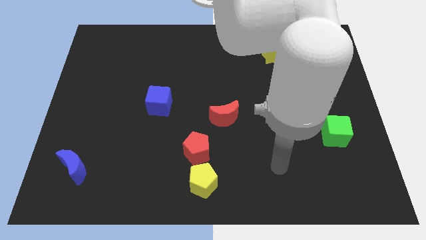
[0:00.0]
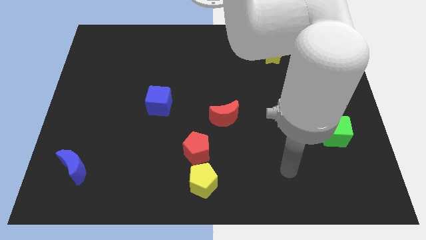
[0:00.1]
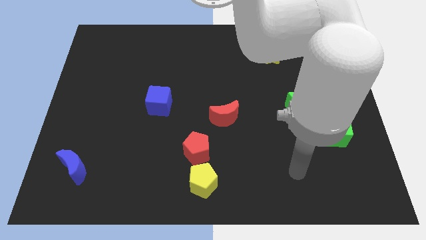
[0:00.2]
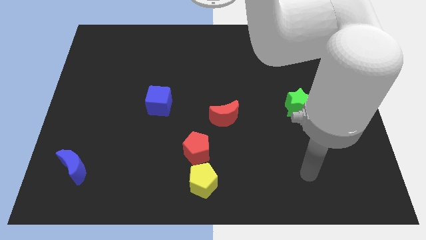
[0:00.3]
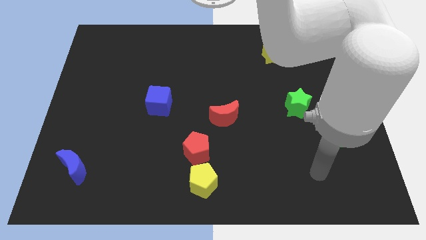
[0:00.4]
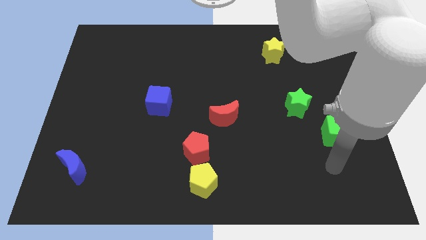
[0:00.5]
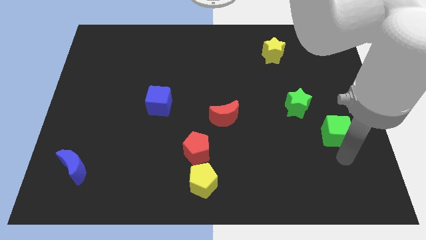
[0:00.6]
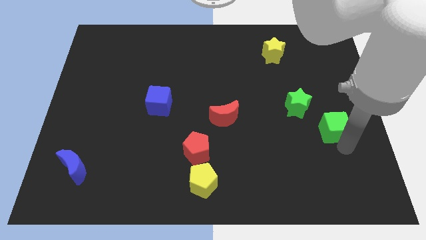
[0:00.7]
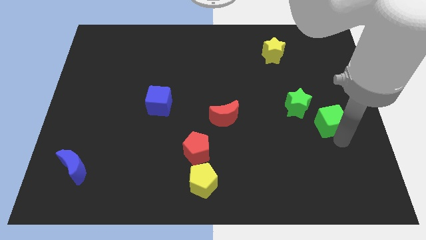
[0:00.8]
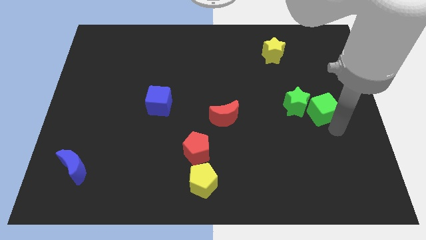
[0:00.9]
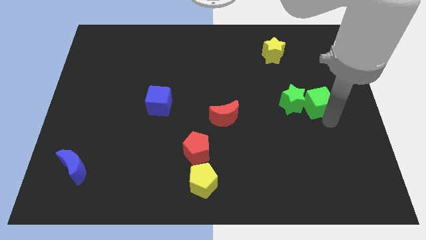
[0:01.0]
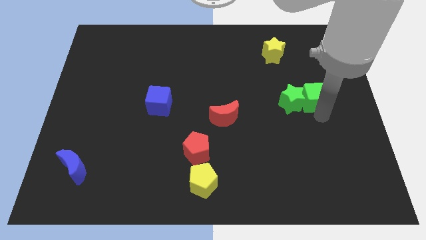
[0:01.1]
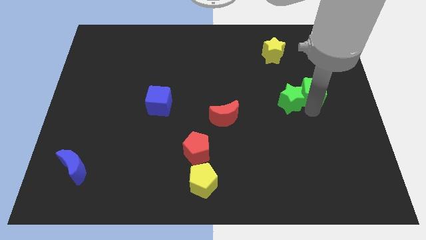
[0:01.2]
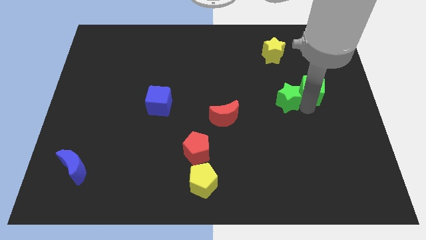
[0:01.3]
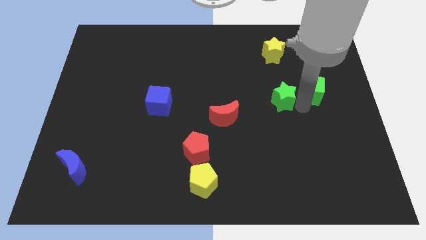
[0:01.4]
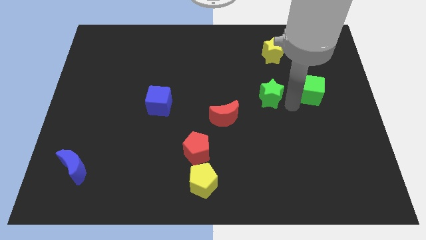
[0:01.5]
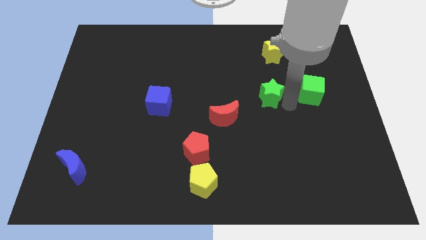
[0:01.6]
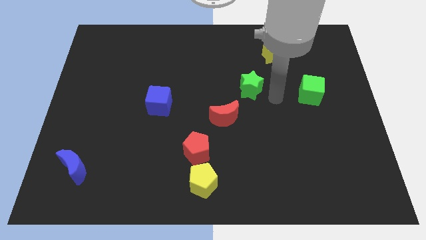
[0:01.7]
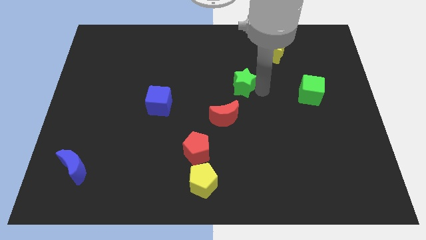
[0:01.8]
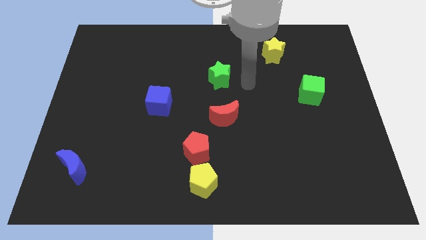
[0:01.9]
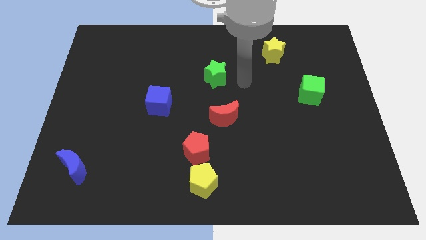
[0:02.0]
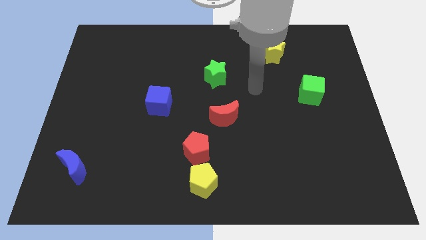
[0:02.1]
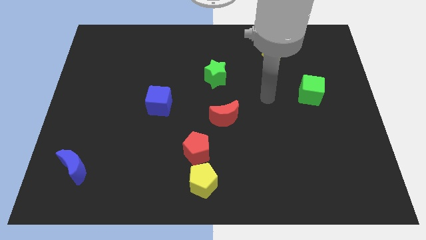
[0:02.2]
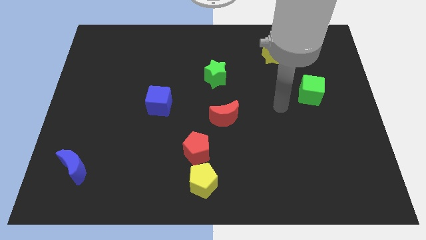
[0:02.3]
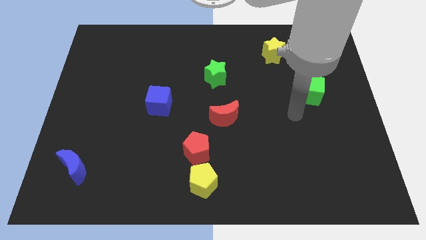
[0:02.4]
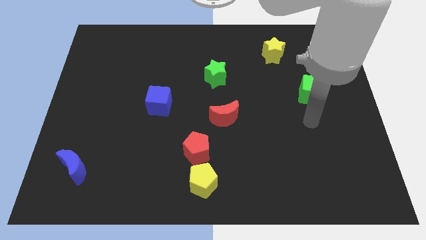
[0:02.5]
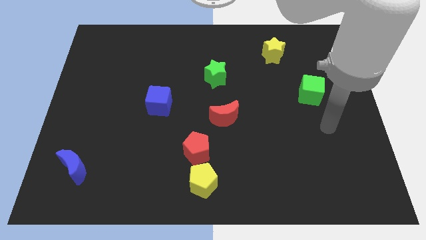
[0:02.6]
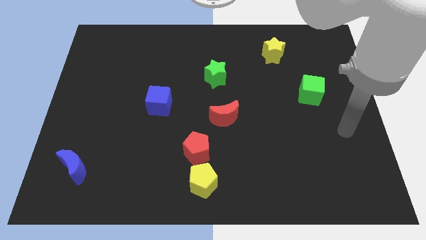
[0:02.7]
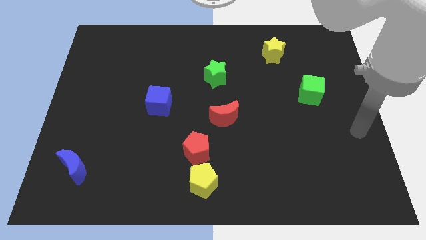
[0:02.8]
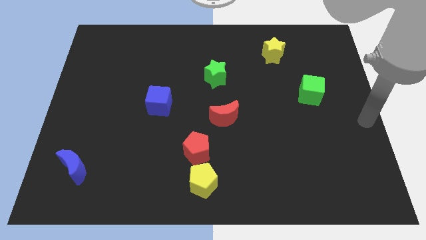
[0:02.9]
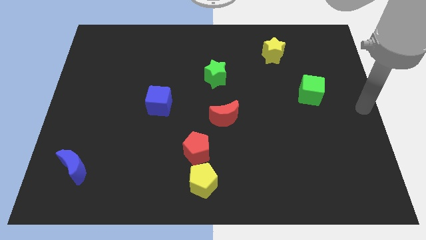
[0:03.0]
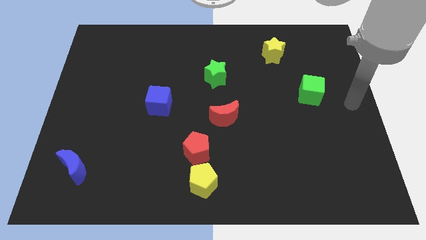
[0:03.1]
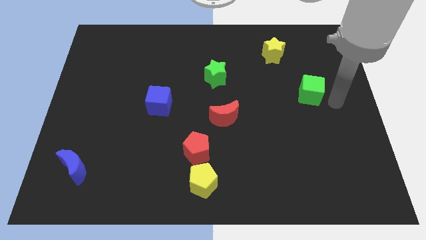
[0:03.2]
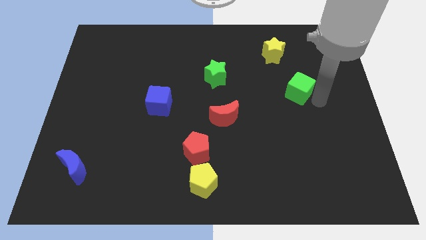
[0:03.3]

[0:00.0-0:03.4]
separate green star from green cube

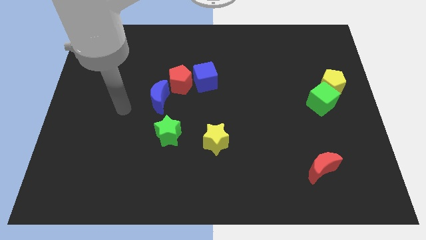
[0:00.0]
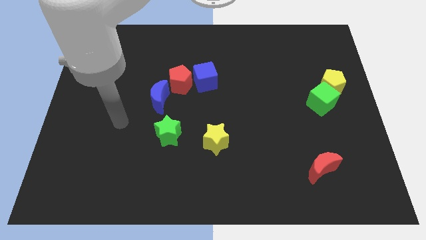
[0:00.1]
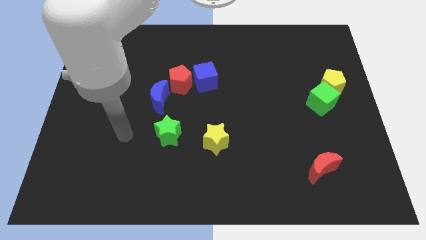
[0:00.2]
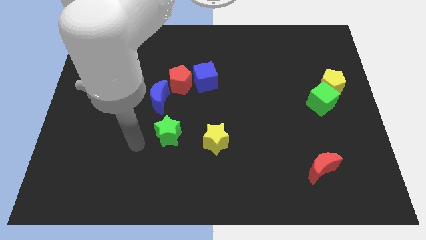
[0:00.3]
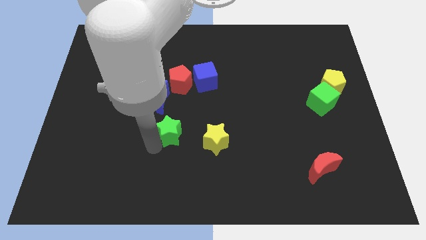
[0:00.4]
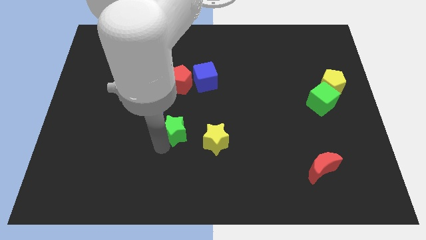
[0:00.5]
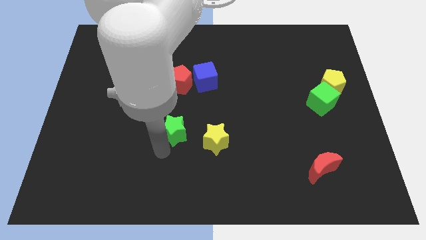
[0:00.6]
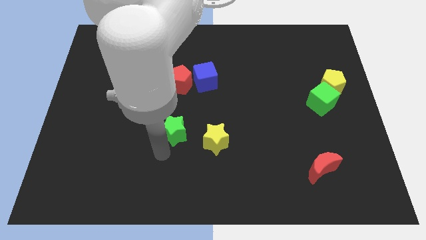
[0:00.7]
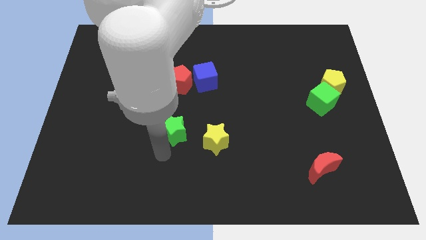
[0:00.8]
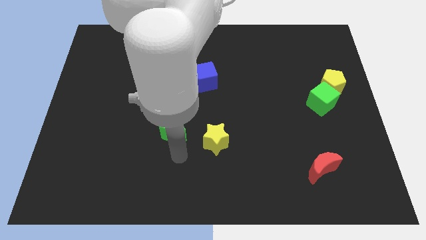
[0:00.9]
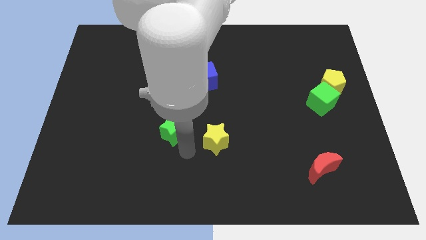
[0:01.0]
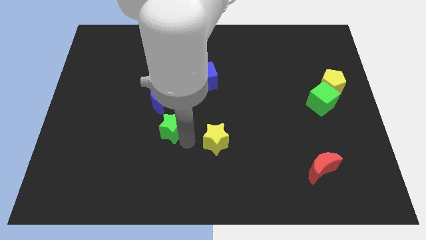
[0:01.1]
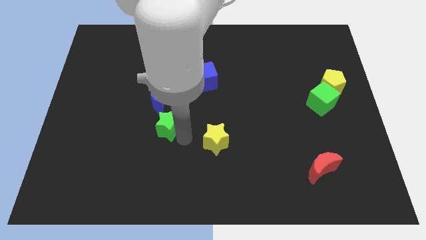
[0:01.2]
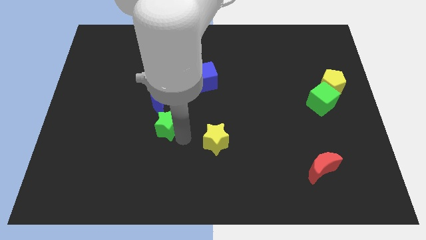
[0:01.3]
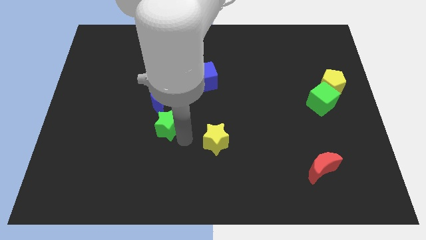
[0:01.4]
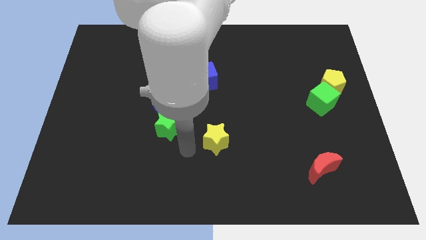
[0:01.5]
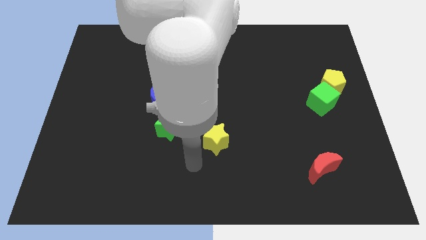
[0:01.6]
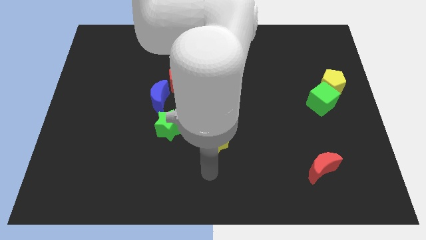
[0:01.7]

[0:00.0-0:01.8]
slightly move the green star to the bottom side of the blue crescent

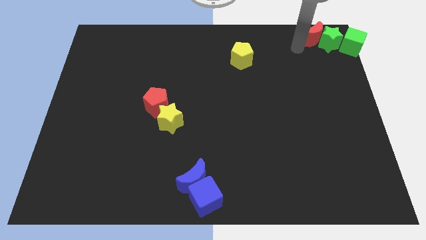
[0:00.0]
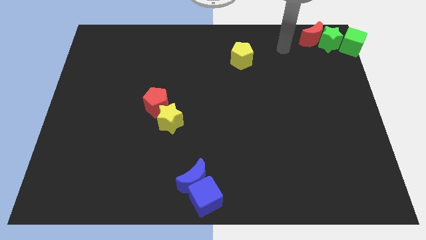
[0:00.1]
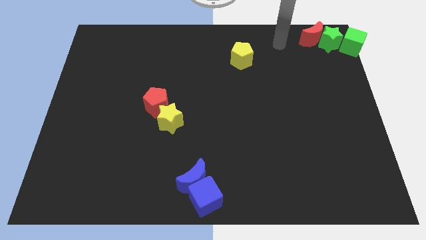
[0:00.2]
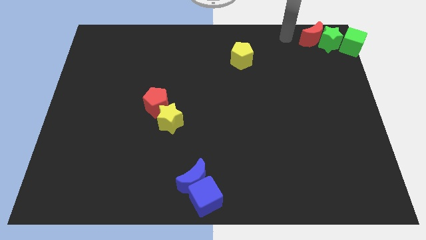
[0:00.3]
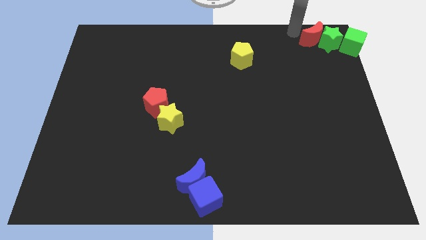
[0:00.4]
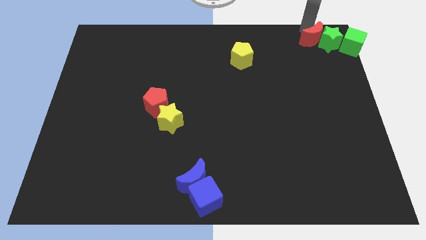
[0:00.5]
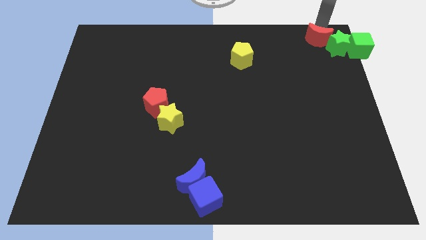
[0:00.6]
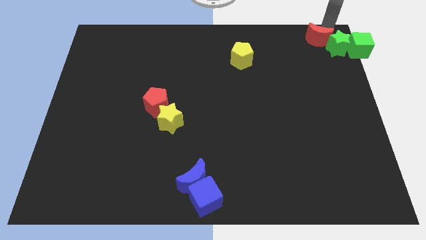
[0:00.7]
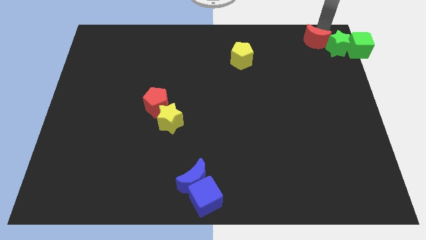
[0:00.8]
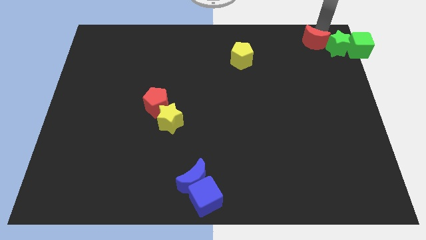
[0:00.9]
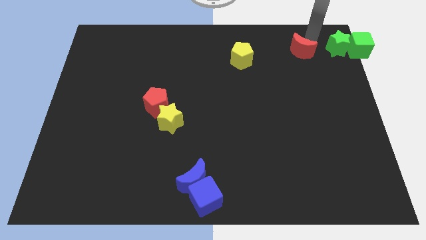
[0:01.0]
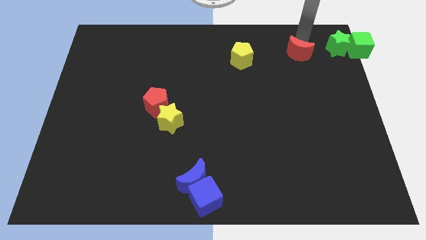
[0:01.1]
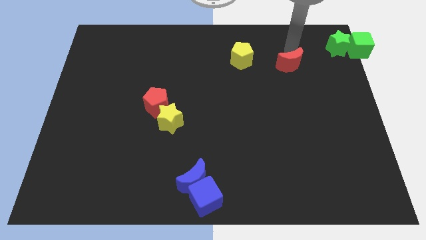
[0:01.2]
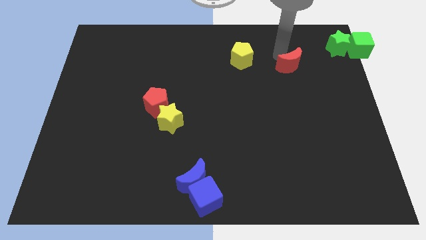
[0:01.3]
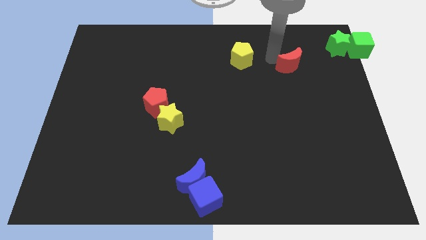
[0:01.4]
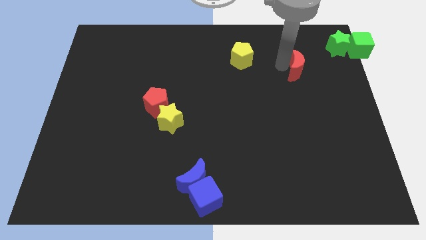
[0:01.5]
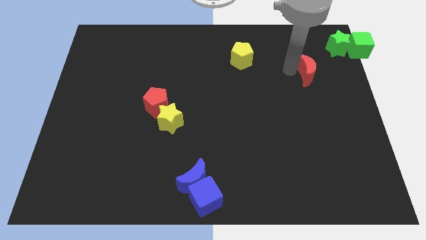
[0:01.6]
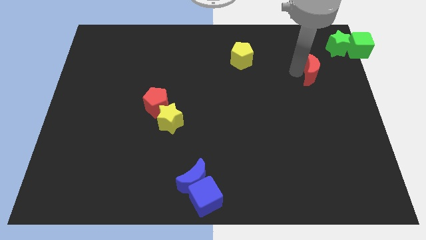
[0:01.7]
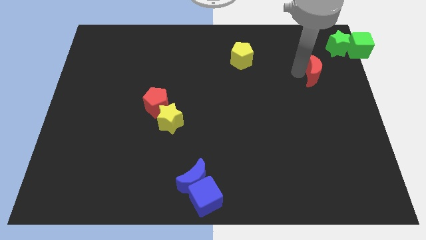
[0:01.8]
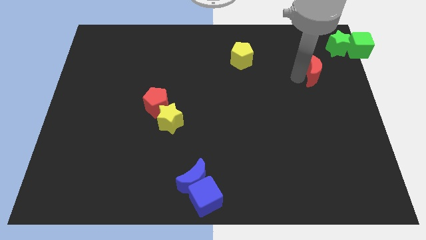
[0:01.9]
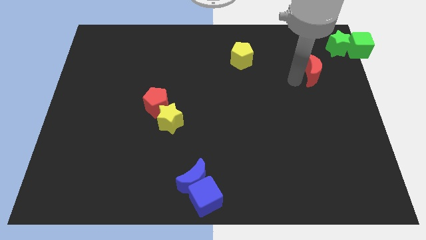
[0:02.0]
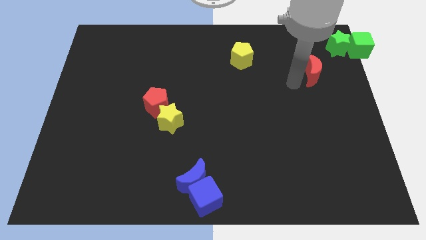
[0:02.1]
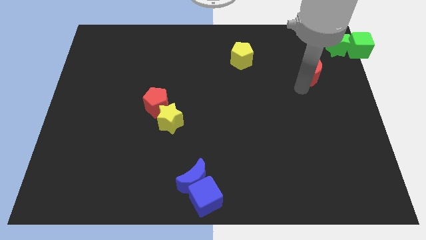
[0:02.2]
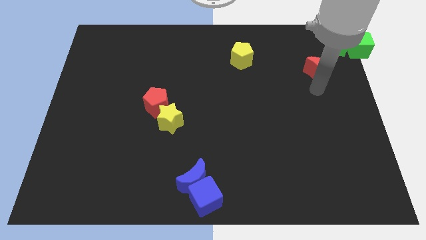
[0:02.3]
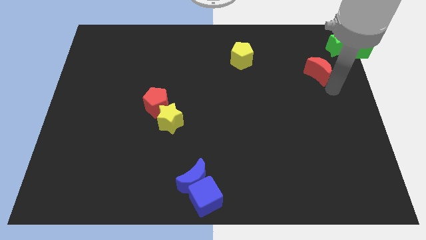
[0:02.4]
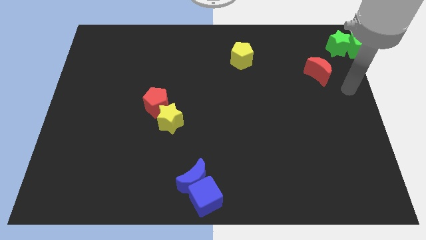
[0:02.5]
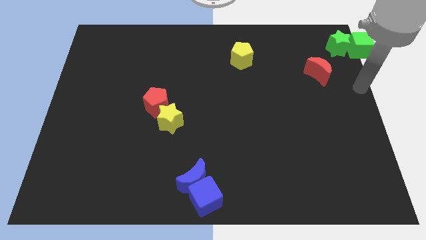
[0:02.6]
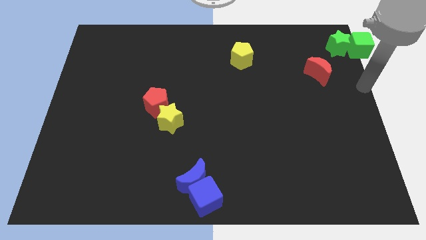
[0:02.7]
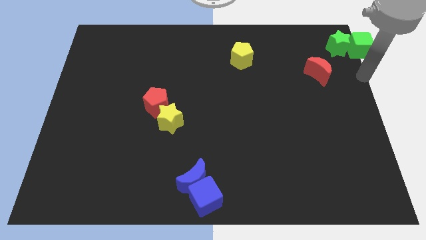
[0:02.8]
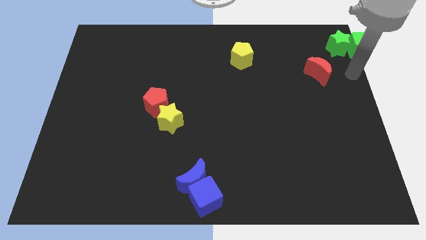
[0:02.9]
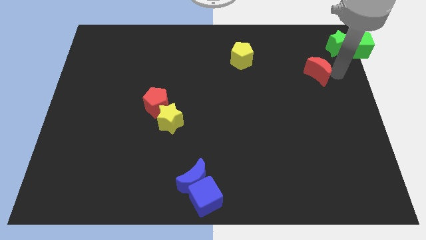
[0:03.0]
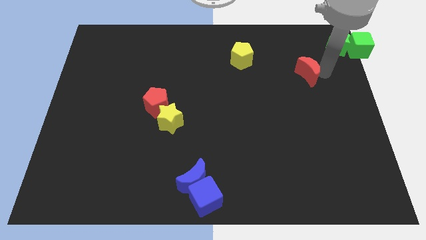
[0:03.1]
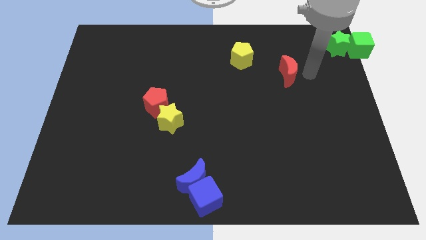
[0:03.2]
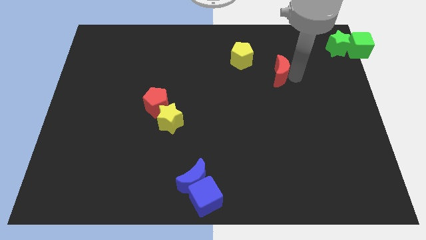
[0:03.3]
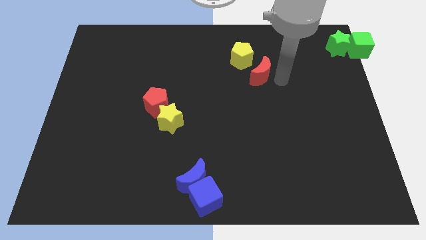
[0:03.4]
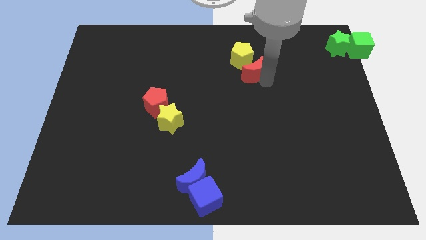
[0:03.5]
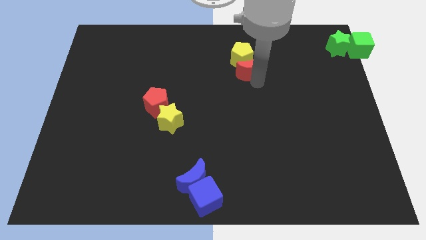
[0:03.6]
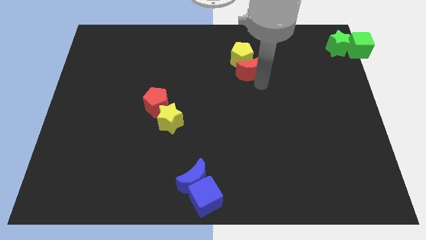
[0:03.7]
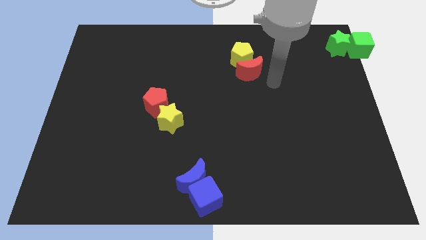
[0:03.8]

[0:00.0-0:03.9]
separate the red moon from the green star
